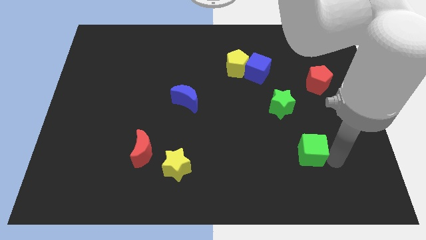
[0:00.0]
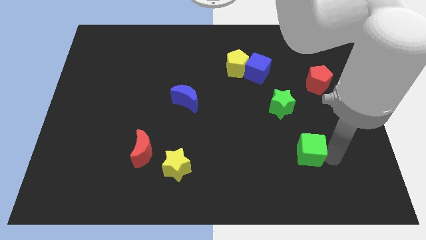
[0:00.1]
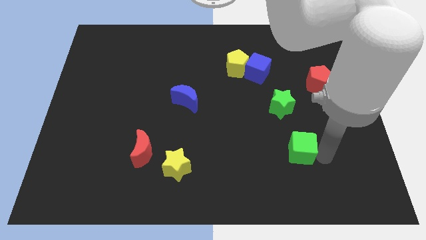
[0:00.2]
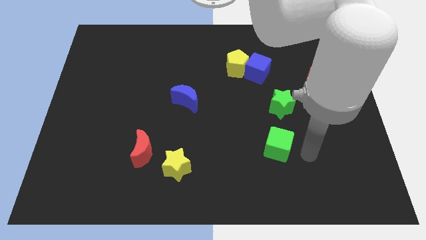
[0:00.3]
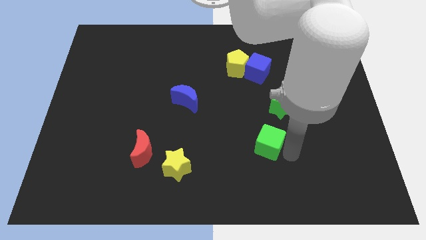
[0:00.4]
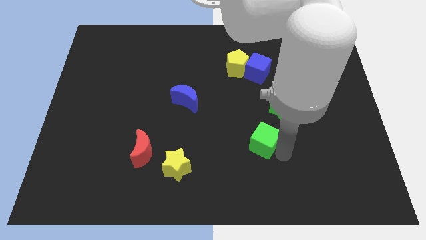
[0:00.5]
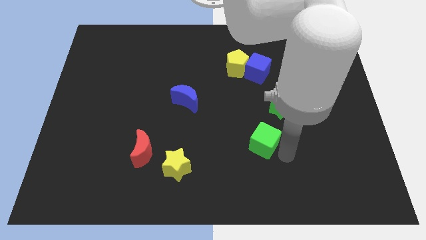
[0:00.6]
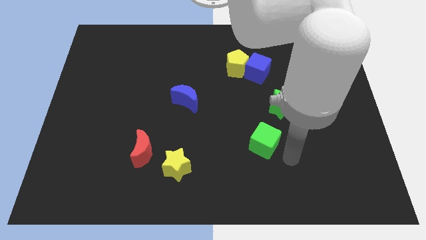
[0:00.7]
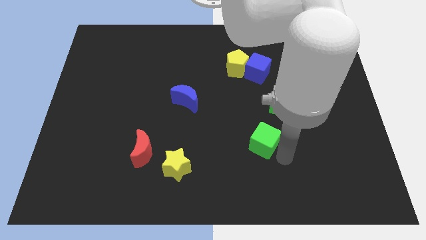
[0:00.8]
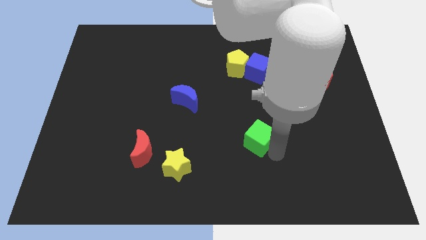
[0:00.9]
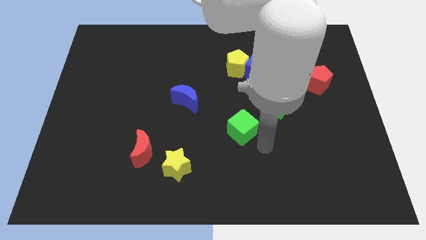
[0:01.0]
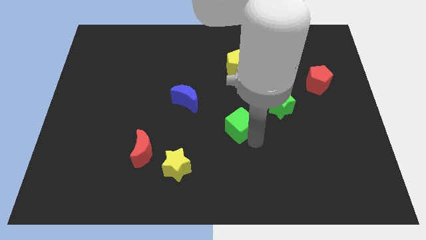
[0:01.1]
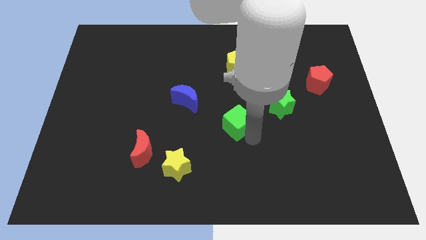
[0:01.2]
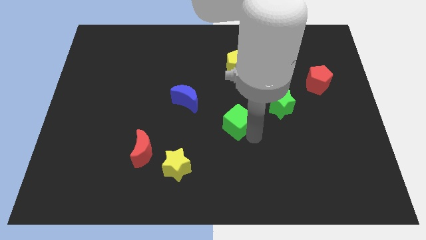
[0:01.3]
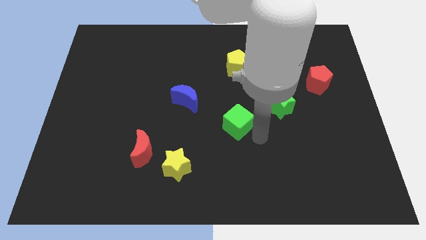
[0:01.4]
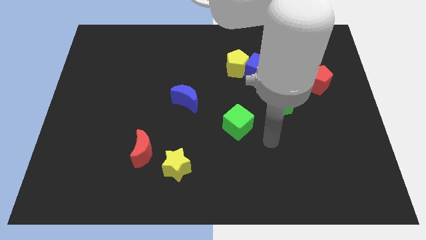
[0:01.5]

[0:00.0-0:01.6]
push the green cube towards the center of the board

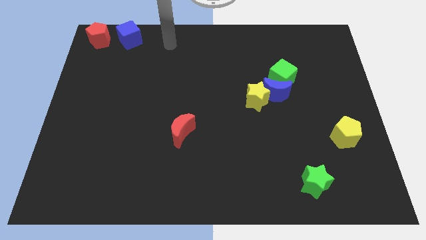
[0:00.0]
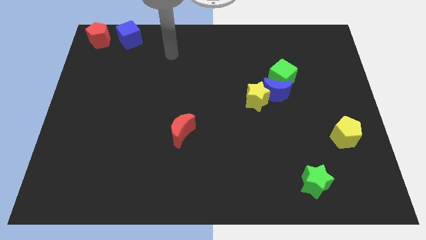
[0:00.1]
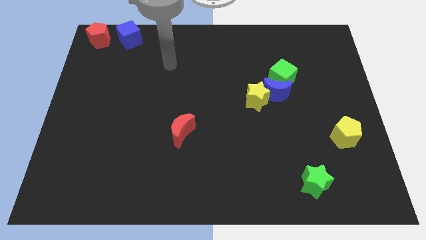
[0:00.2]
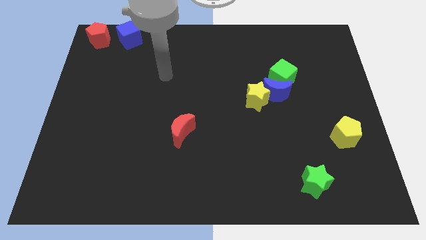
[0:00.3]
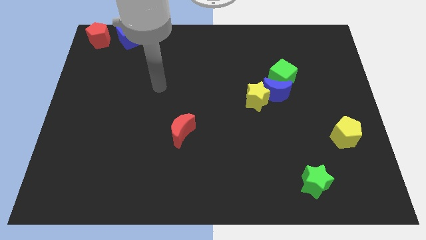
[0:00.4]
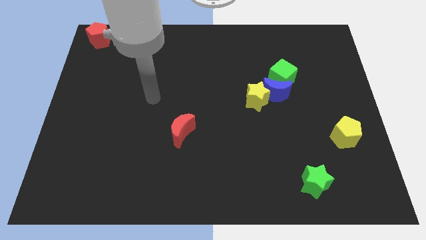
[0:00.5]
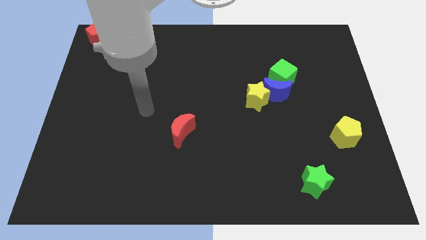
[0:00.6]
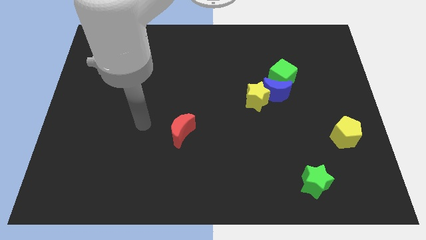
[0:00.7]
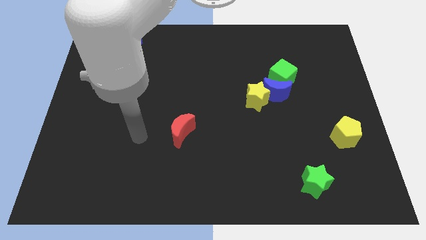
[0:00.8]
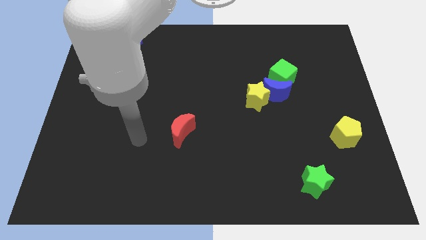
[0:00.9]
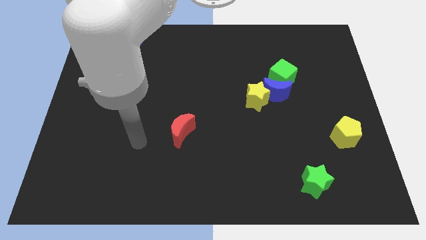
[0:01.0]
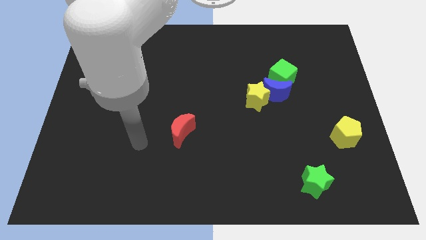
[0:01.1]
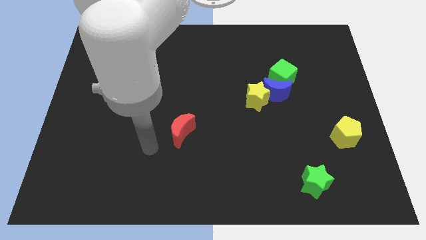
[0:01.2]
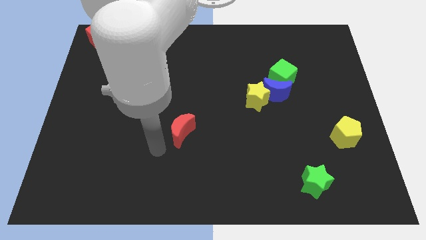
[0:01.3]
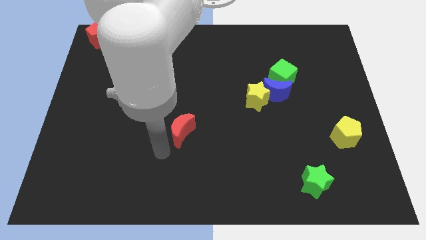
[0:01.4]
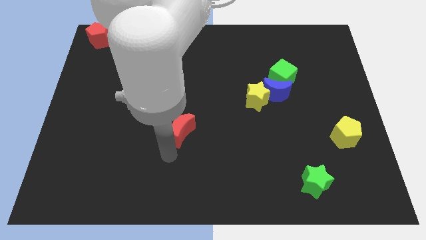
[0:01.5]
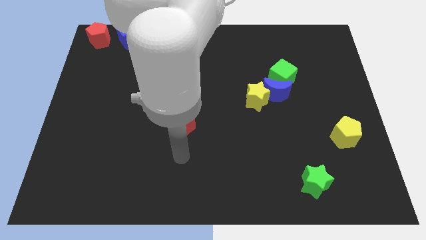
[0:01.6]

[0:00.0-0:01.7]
place your hand under the red crescent

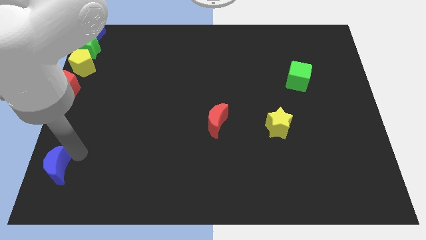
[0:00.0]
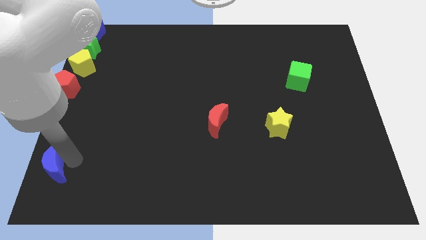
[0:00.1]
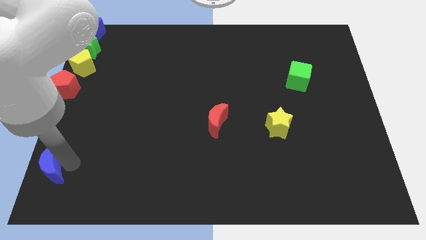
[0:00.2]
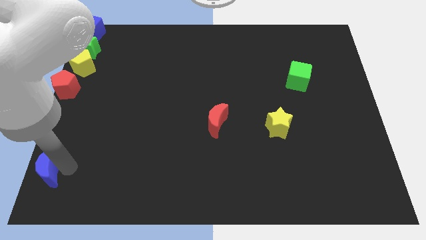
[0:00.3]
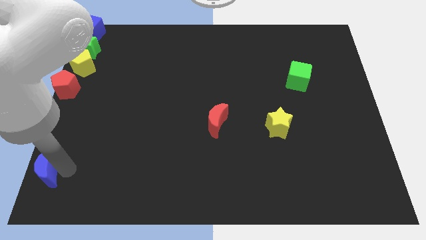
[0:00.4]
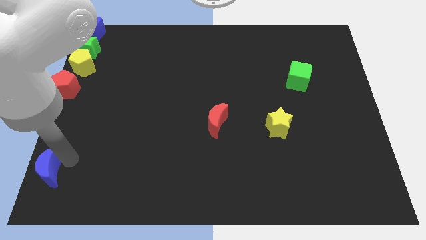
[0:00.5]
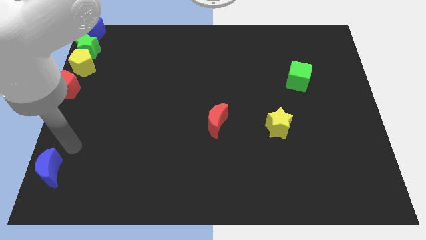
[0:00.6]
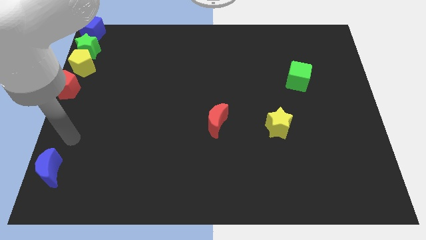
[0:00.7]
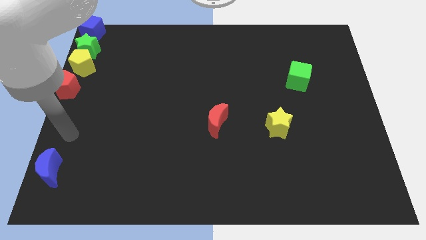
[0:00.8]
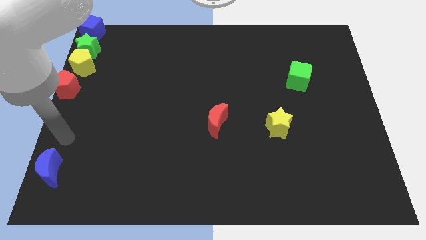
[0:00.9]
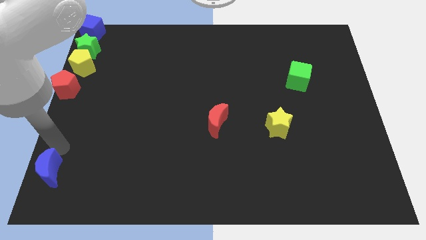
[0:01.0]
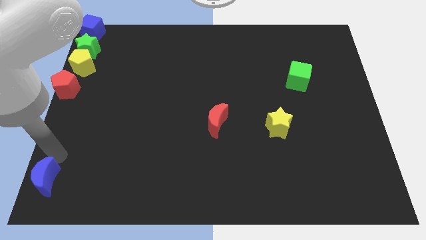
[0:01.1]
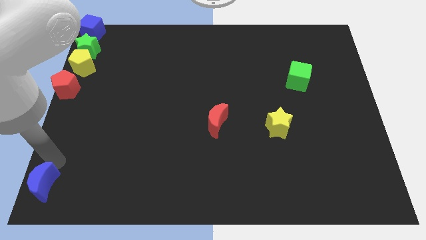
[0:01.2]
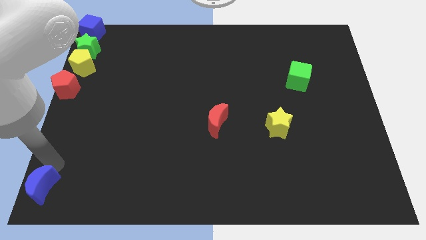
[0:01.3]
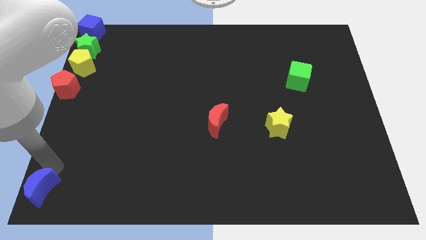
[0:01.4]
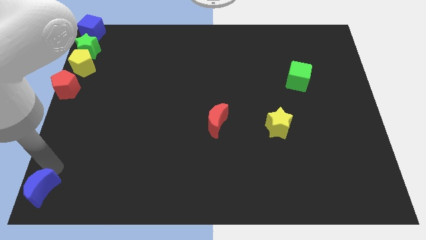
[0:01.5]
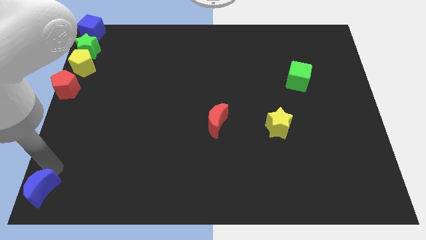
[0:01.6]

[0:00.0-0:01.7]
place the blue crescent at the bottom left corner

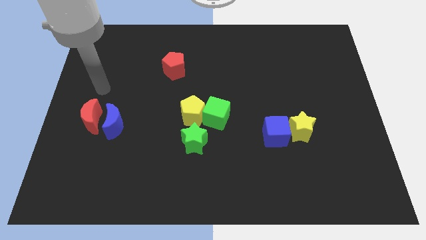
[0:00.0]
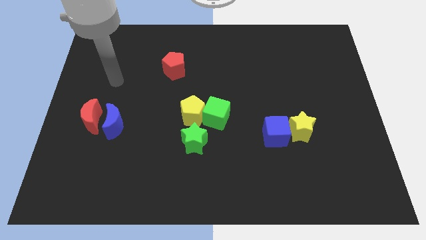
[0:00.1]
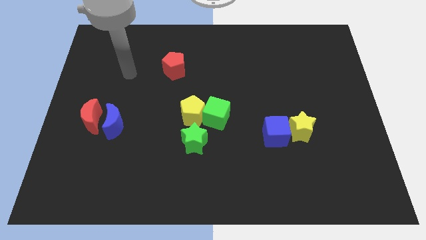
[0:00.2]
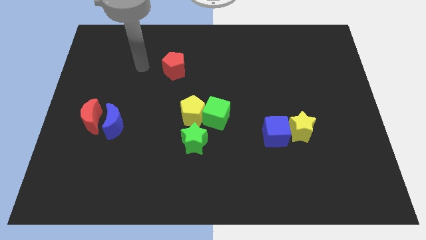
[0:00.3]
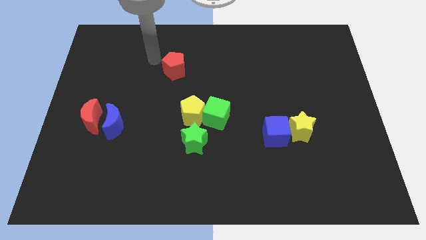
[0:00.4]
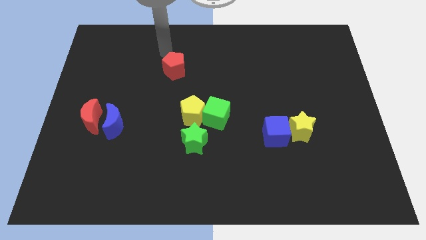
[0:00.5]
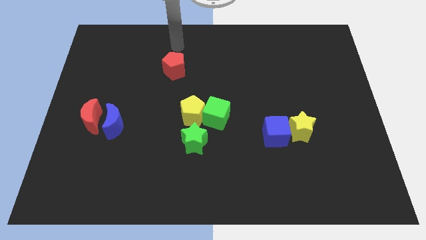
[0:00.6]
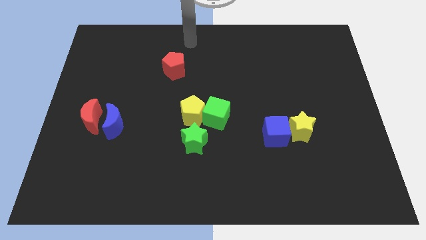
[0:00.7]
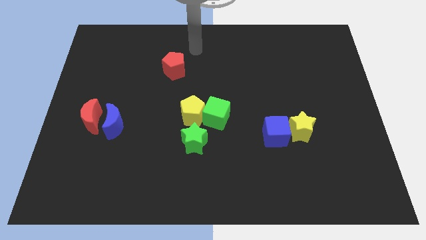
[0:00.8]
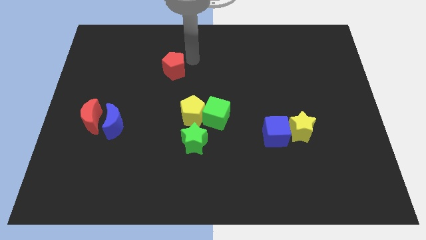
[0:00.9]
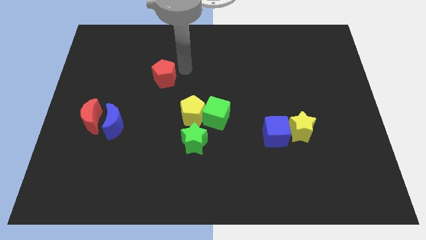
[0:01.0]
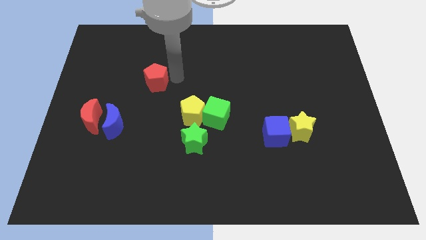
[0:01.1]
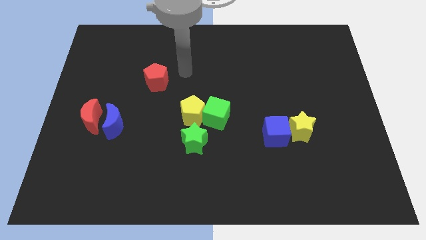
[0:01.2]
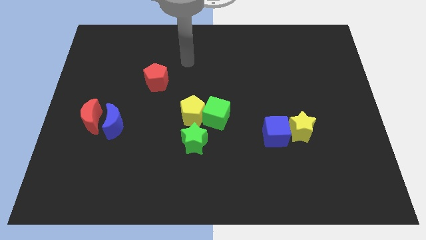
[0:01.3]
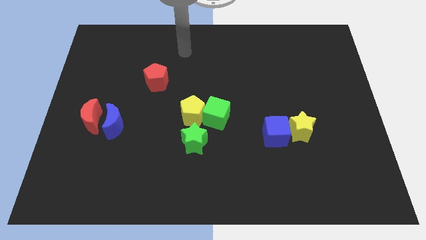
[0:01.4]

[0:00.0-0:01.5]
slide the red pentagon towards the blue moon

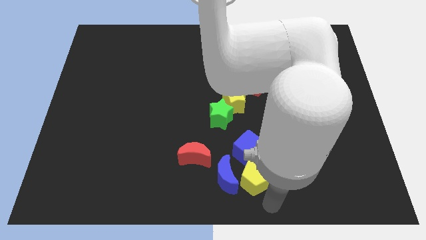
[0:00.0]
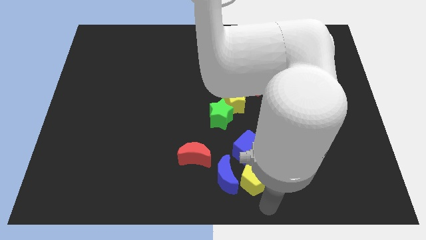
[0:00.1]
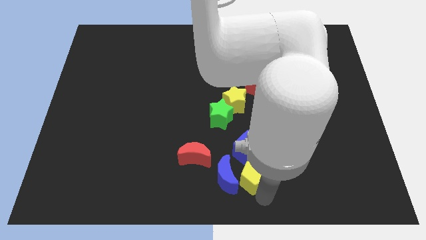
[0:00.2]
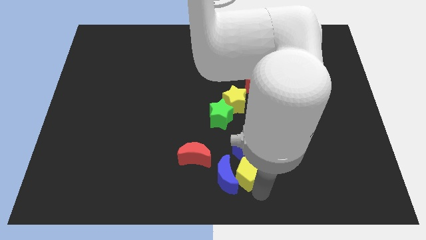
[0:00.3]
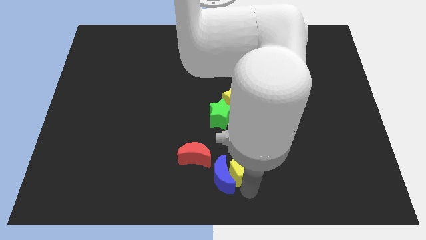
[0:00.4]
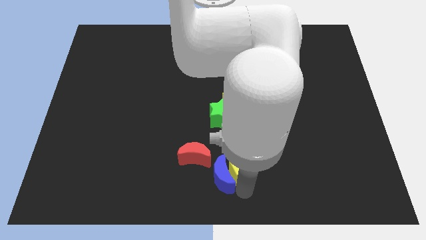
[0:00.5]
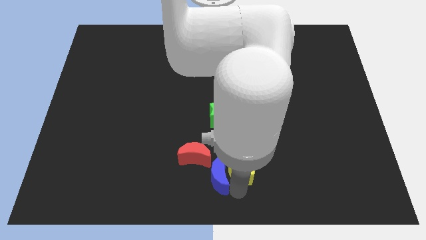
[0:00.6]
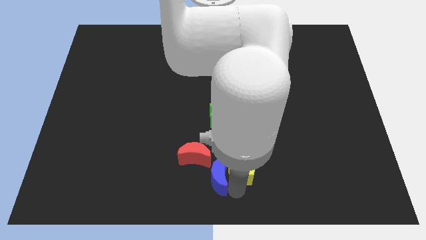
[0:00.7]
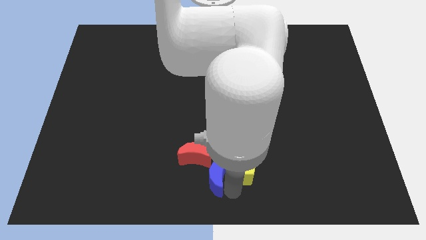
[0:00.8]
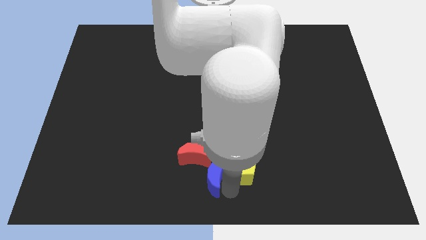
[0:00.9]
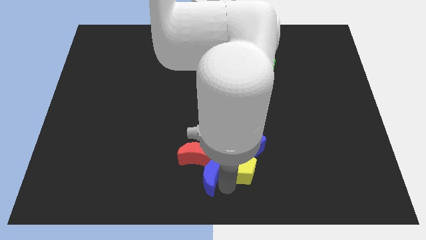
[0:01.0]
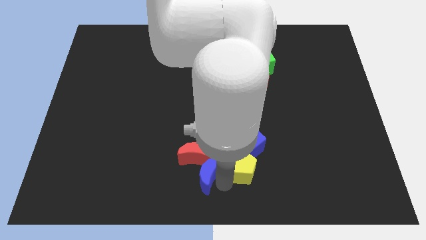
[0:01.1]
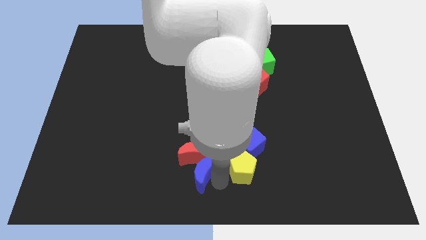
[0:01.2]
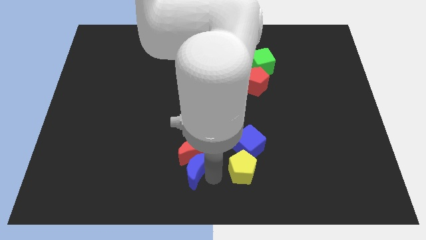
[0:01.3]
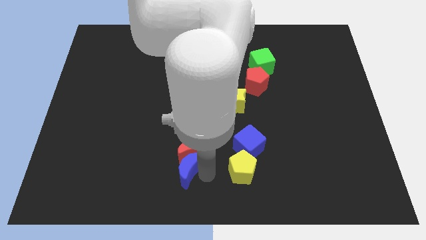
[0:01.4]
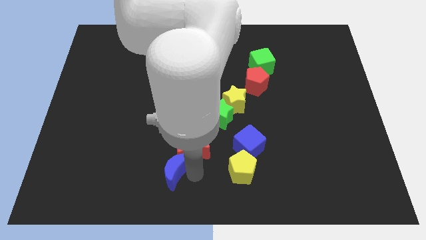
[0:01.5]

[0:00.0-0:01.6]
move the blue crescent into the bottom side of the red moon

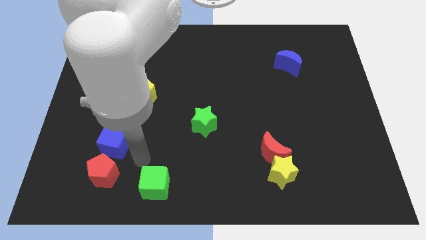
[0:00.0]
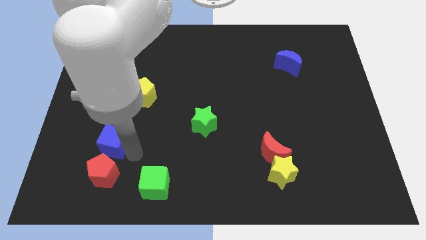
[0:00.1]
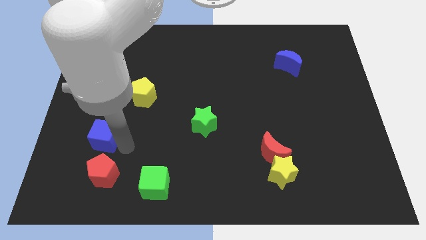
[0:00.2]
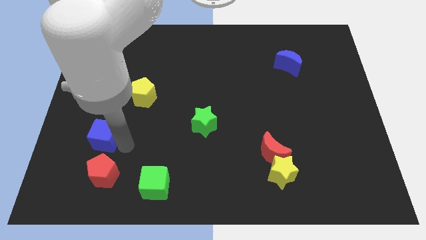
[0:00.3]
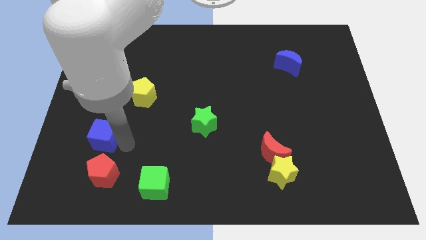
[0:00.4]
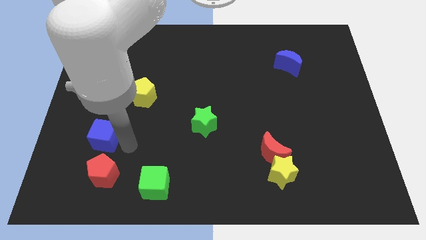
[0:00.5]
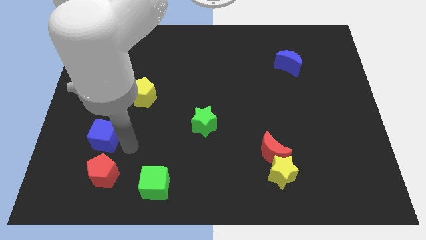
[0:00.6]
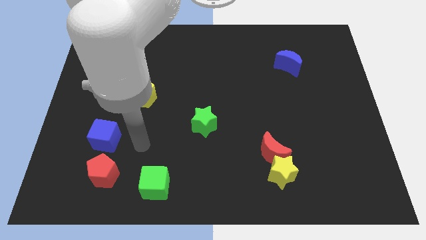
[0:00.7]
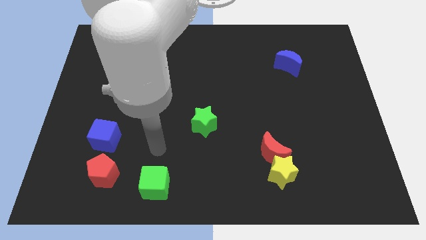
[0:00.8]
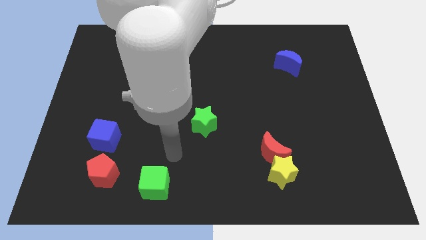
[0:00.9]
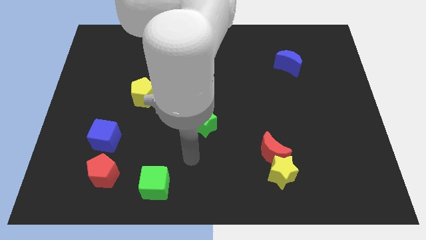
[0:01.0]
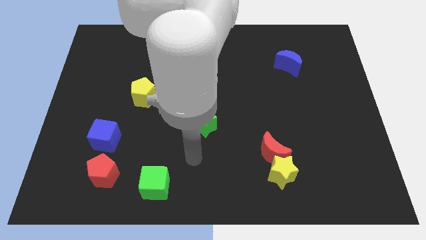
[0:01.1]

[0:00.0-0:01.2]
push the blue cube slightly to the left side of the board
